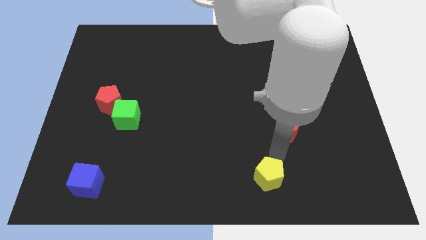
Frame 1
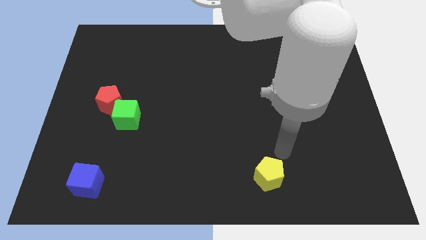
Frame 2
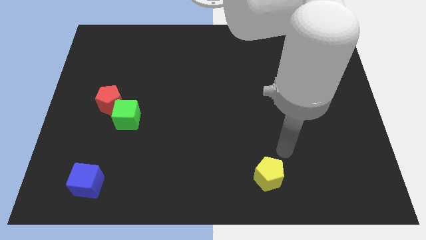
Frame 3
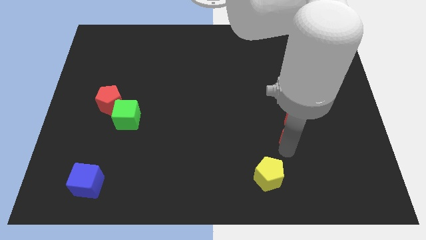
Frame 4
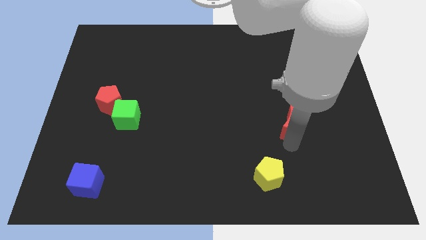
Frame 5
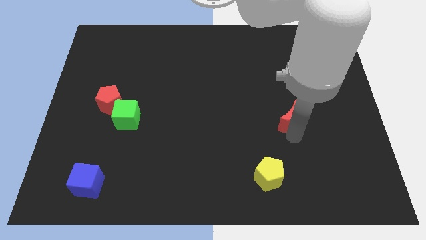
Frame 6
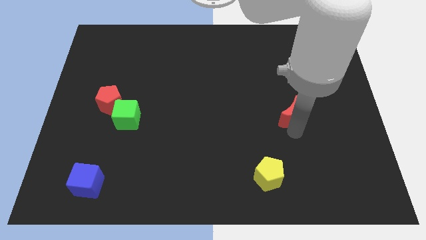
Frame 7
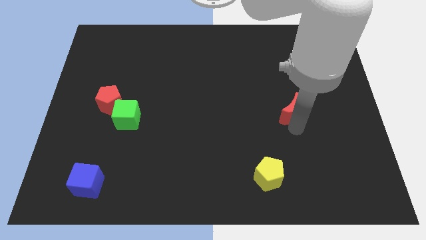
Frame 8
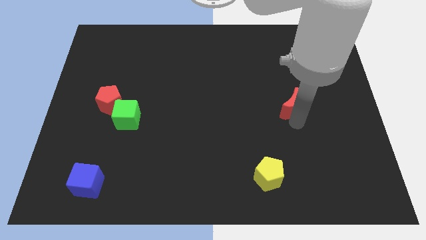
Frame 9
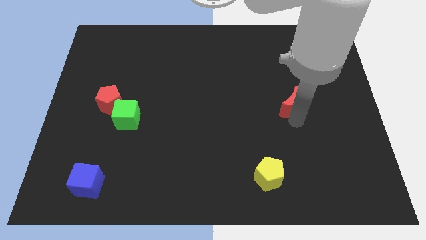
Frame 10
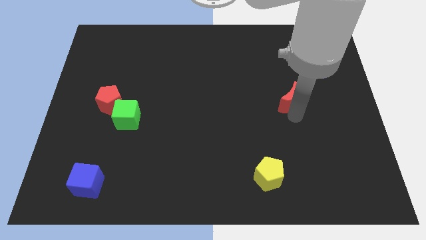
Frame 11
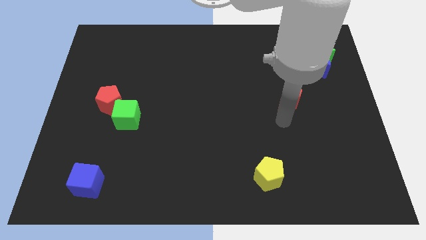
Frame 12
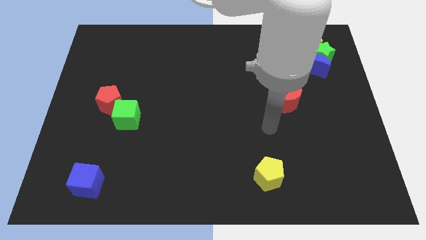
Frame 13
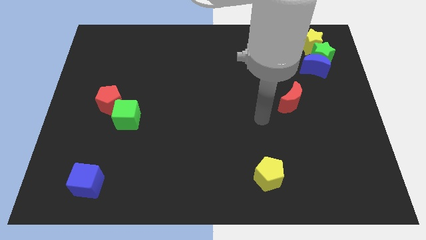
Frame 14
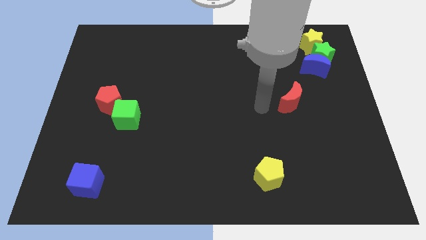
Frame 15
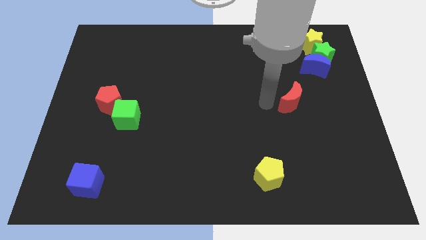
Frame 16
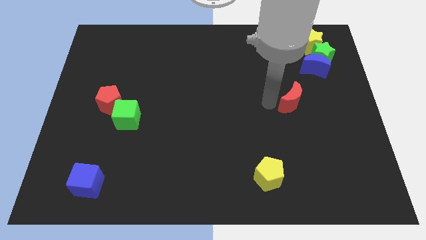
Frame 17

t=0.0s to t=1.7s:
move the red crescent to the top of the board

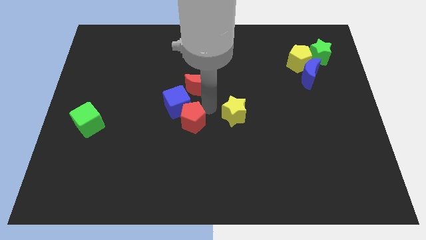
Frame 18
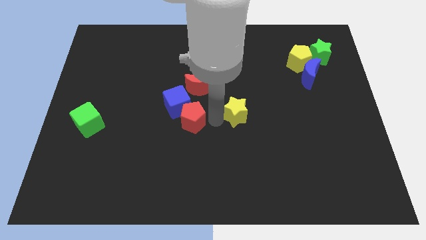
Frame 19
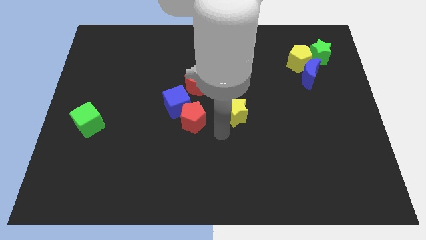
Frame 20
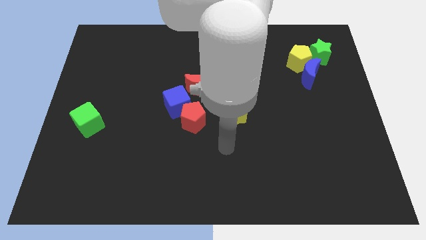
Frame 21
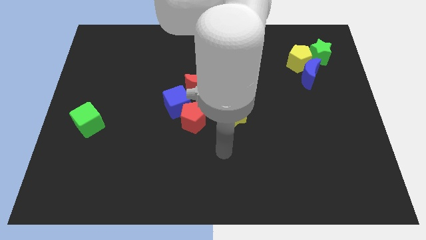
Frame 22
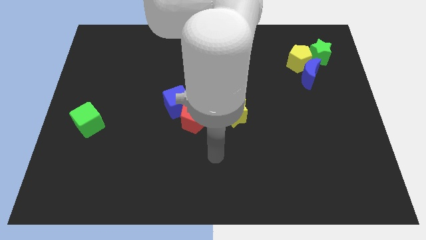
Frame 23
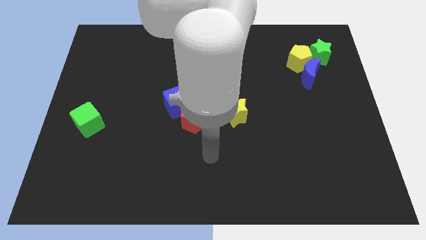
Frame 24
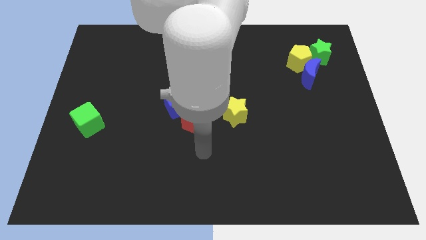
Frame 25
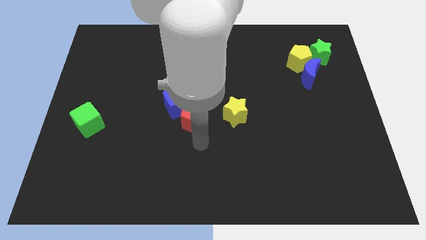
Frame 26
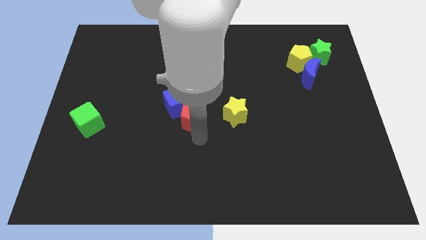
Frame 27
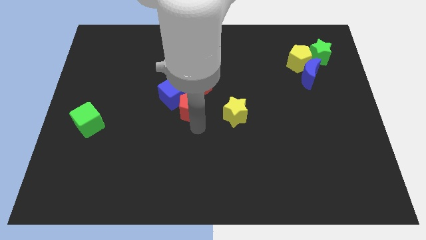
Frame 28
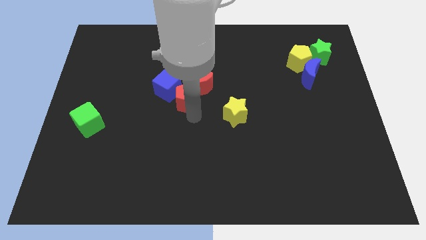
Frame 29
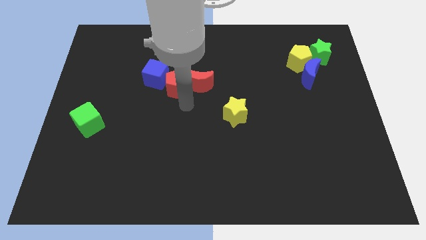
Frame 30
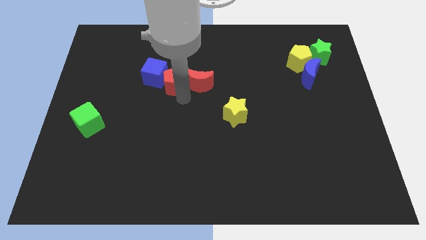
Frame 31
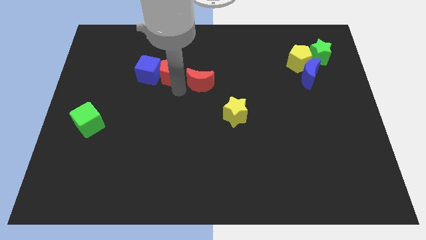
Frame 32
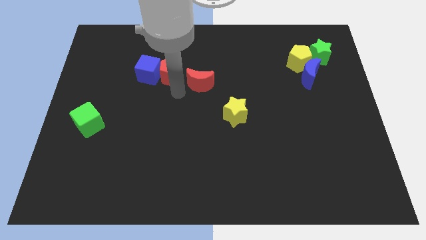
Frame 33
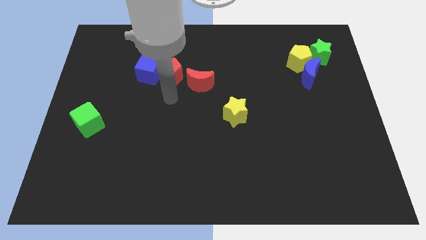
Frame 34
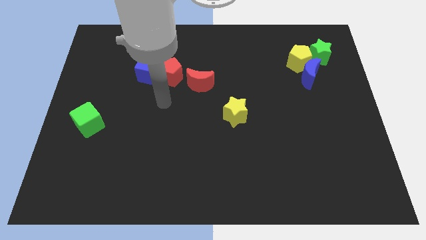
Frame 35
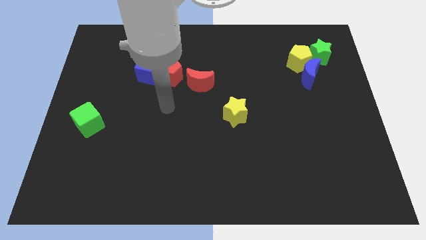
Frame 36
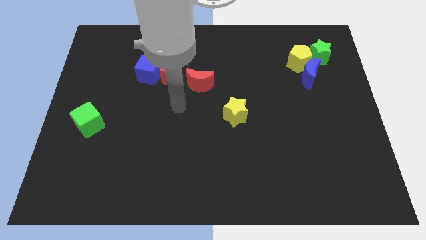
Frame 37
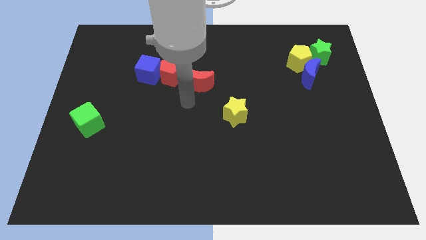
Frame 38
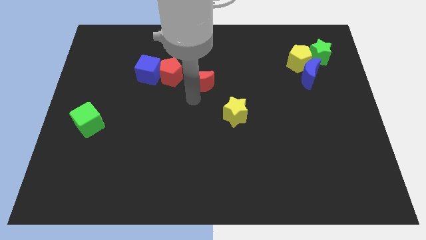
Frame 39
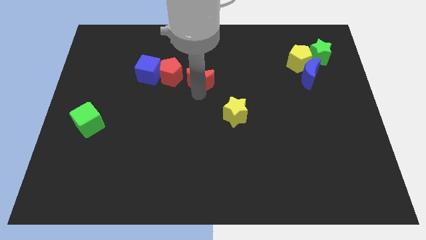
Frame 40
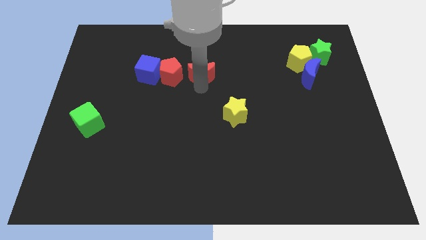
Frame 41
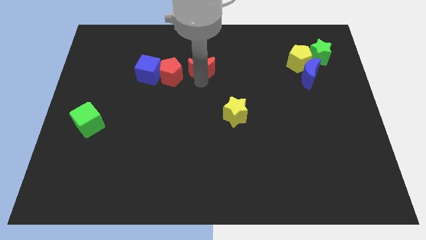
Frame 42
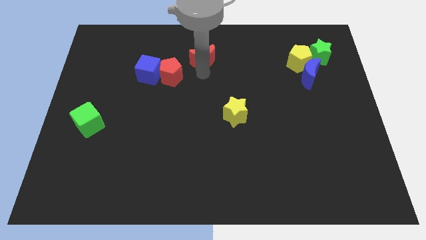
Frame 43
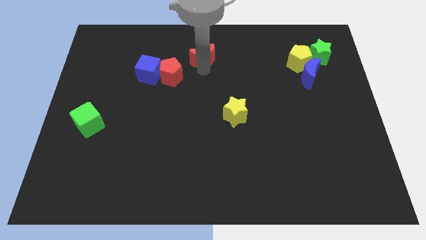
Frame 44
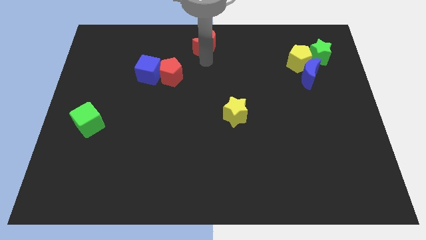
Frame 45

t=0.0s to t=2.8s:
push the red pentagon blue cube and red crescent towards the top side of the board

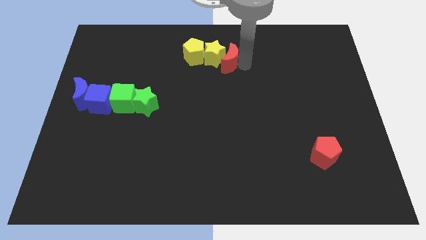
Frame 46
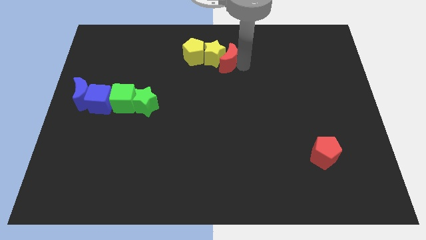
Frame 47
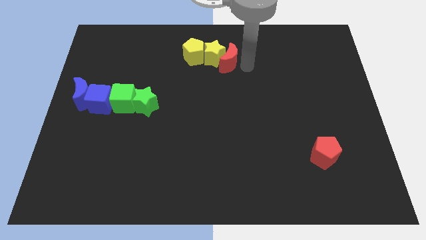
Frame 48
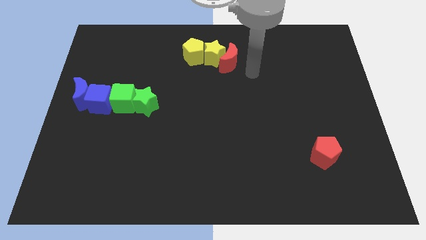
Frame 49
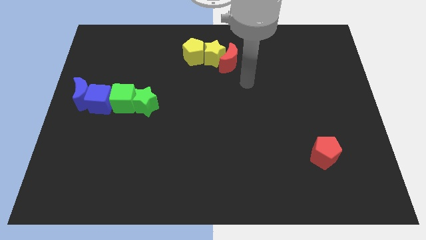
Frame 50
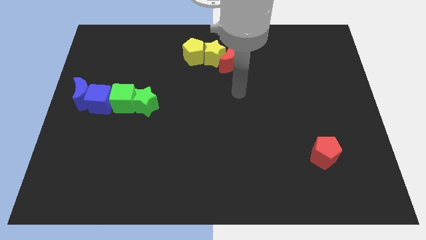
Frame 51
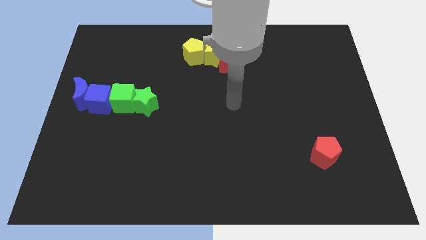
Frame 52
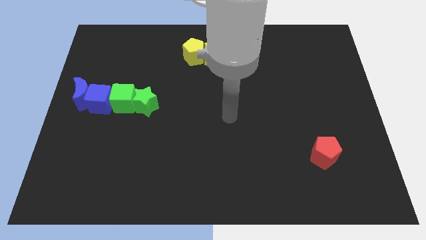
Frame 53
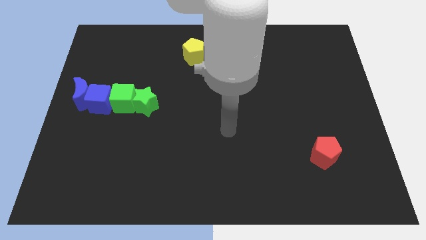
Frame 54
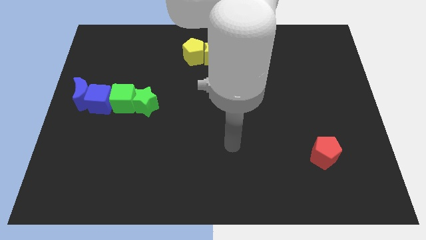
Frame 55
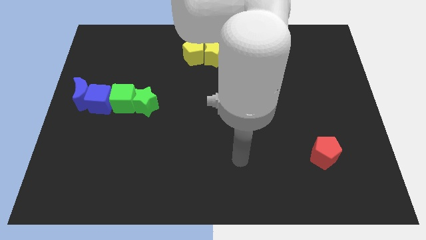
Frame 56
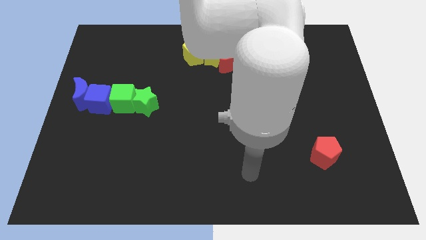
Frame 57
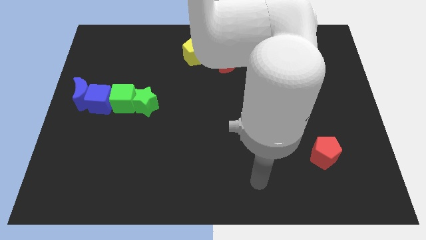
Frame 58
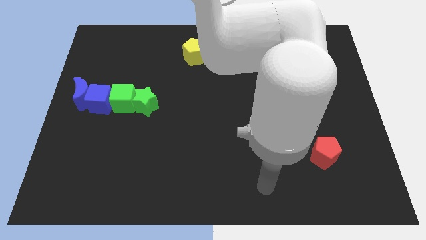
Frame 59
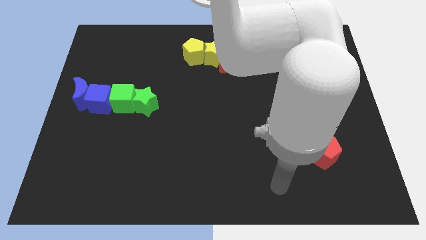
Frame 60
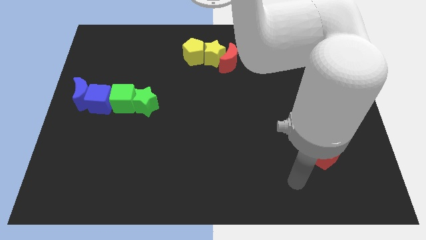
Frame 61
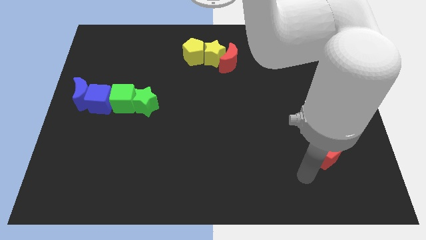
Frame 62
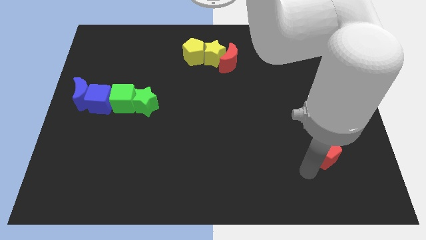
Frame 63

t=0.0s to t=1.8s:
move your arm below the red pentagon

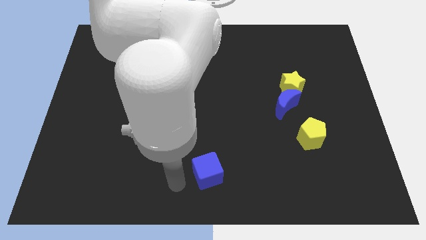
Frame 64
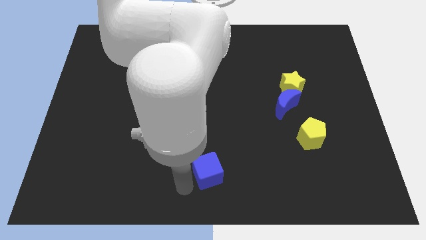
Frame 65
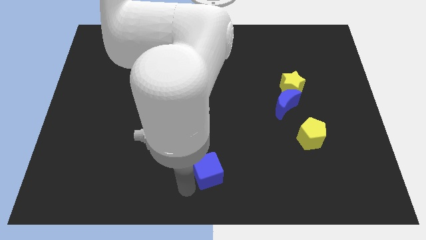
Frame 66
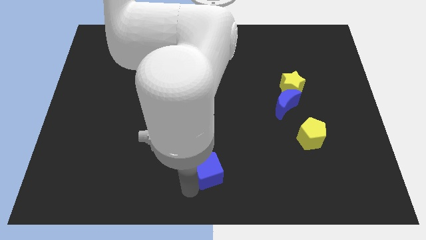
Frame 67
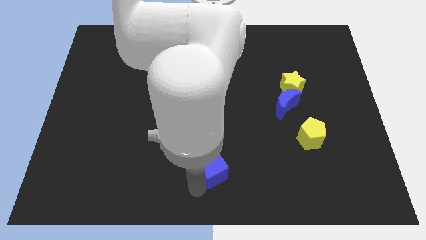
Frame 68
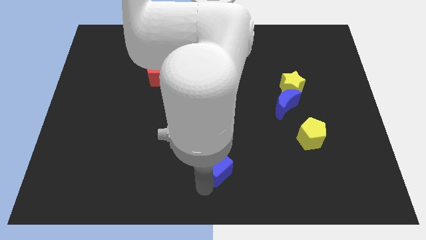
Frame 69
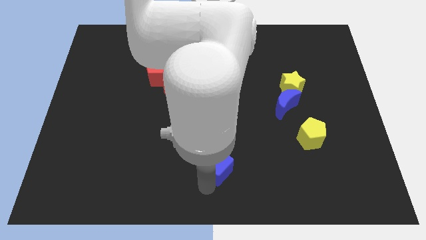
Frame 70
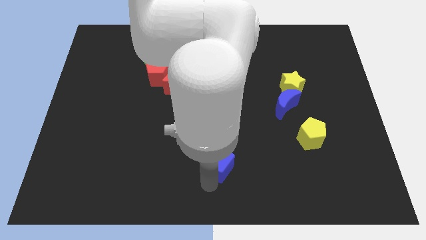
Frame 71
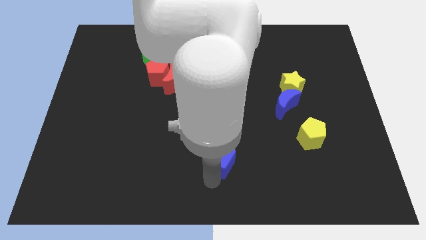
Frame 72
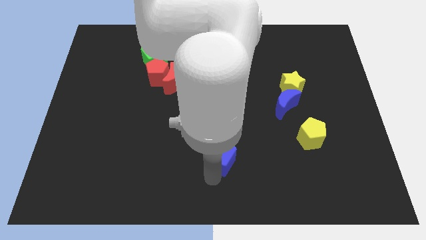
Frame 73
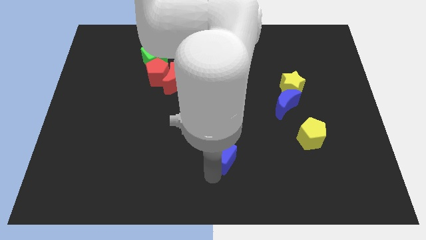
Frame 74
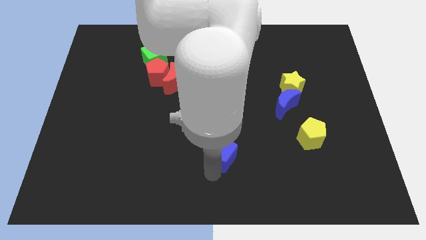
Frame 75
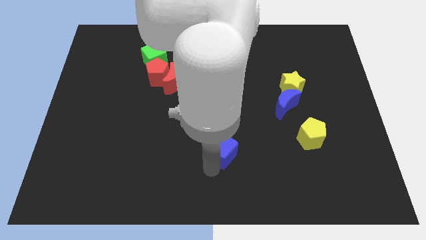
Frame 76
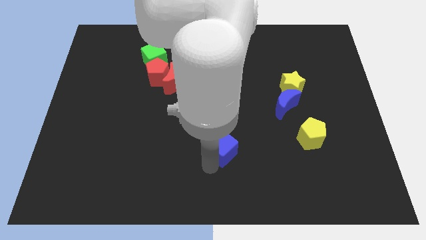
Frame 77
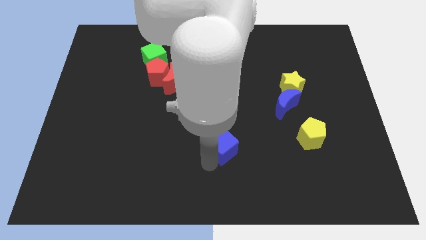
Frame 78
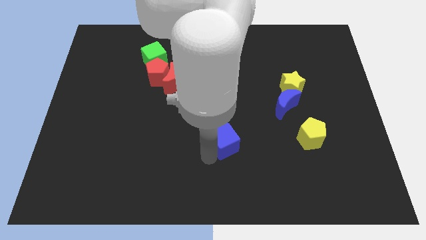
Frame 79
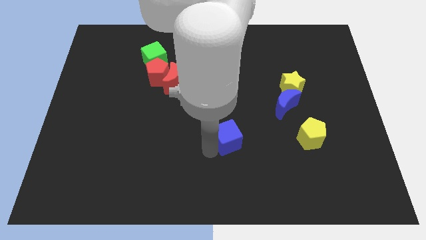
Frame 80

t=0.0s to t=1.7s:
place the blue cube left to the yellow pentagon

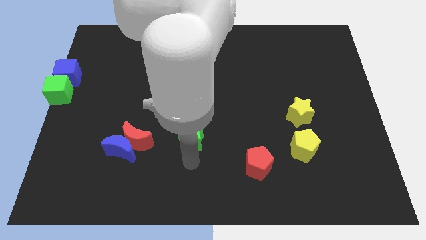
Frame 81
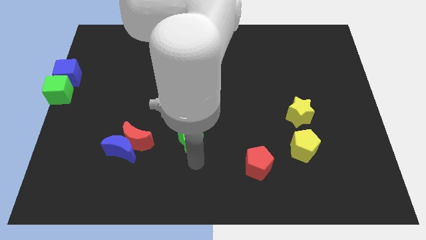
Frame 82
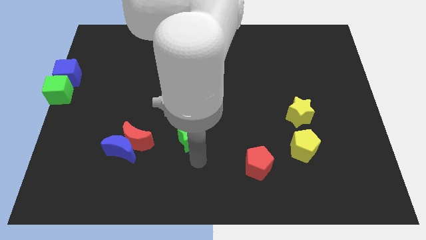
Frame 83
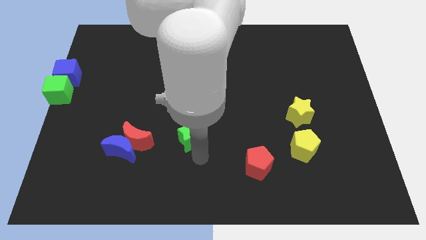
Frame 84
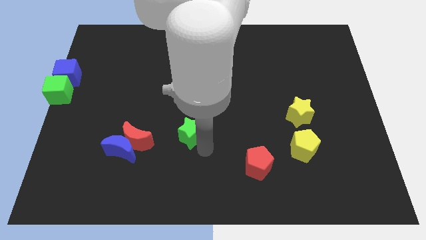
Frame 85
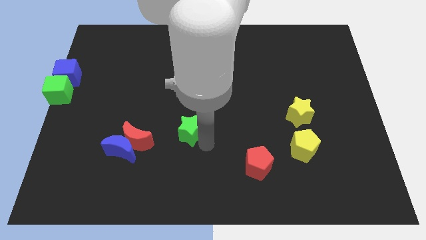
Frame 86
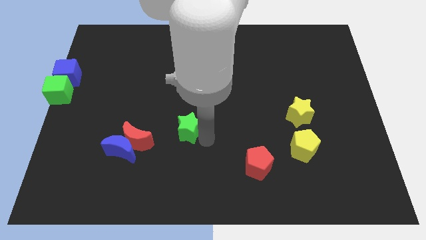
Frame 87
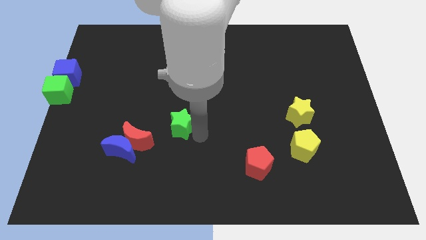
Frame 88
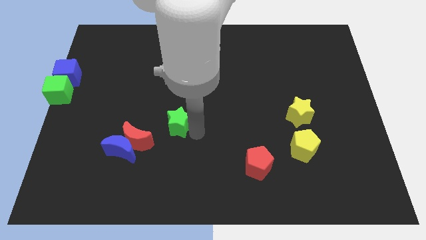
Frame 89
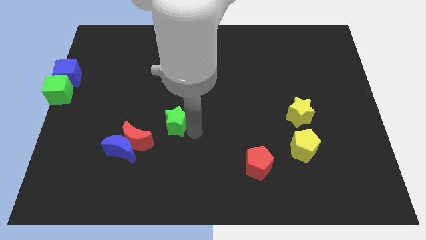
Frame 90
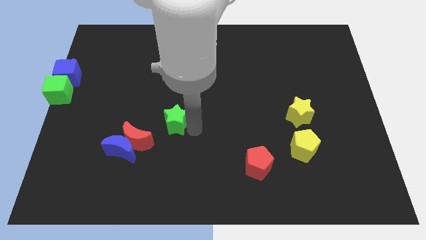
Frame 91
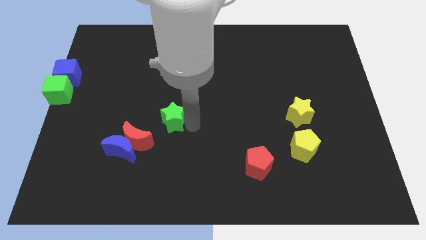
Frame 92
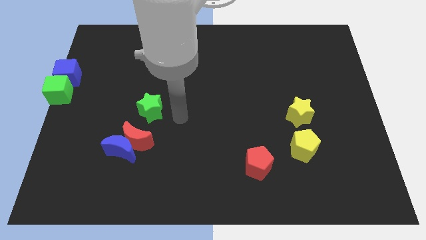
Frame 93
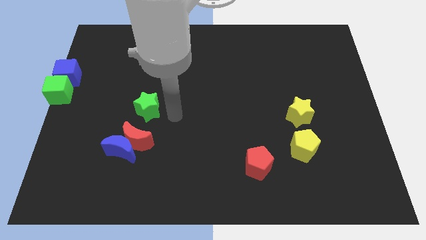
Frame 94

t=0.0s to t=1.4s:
push the green star to the top of the red crescent
